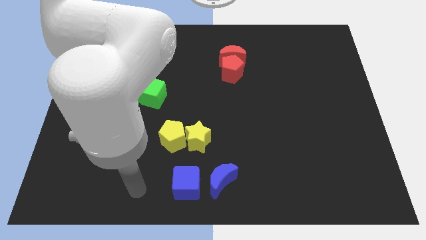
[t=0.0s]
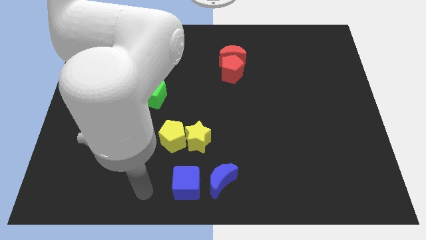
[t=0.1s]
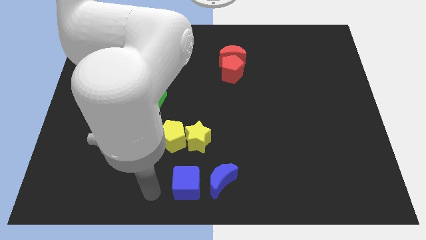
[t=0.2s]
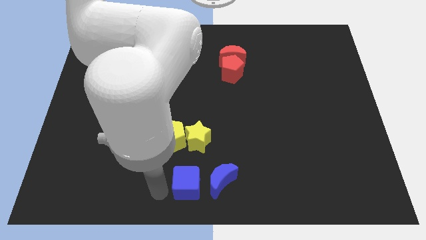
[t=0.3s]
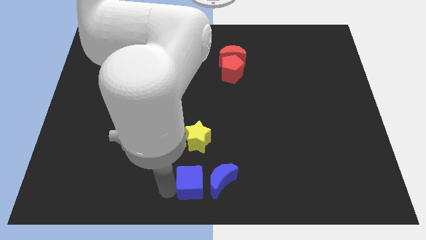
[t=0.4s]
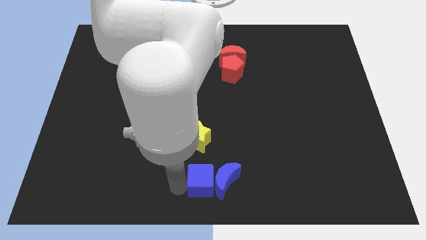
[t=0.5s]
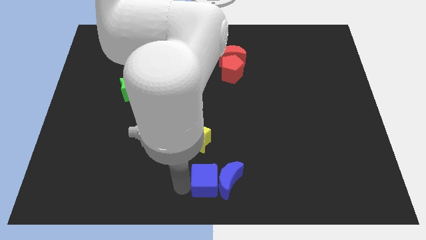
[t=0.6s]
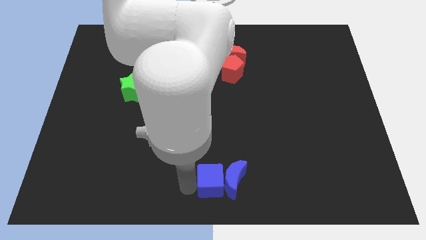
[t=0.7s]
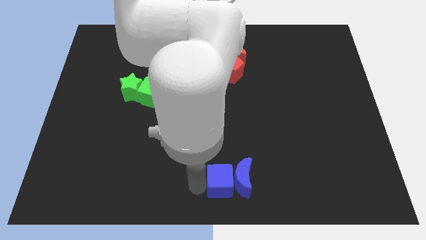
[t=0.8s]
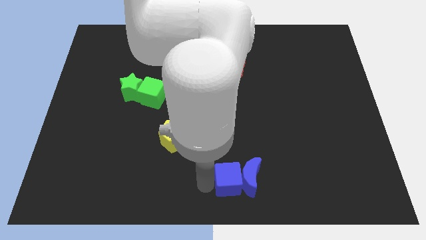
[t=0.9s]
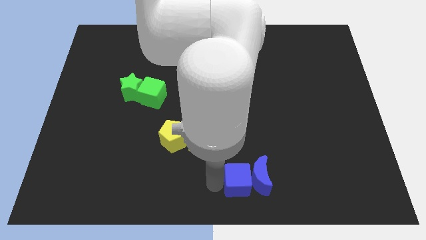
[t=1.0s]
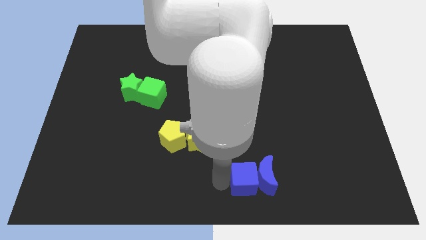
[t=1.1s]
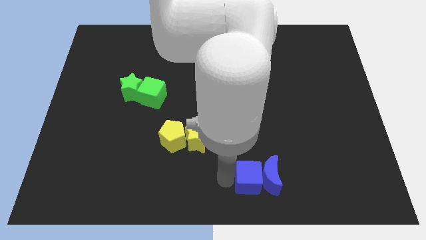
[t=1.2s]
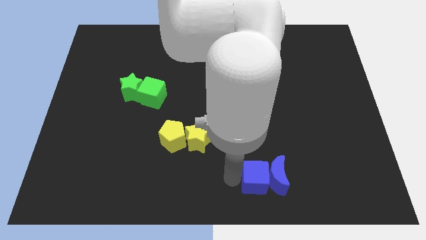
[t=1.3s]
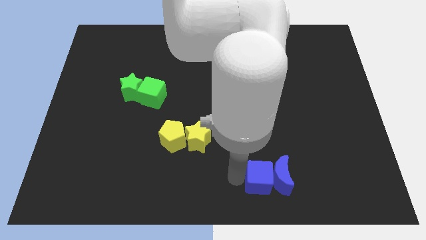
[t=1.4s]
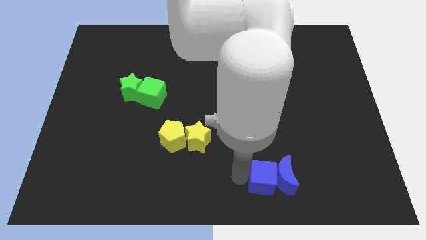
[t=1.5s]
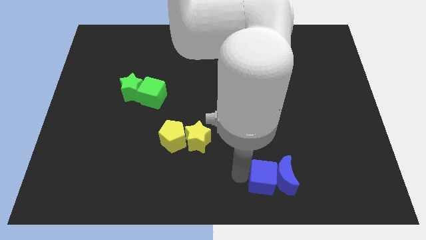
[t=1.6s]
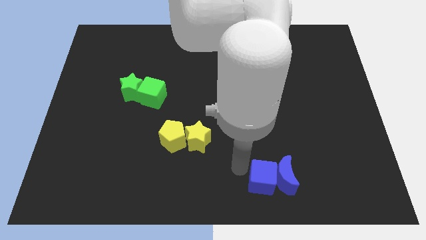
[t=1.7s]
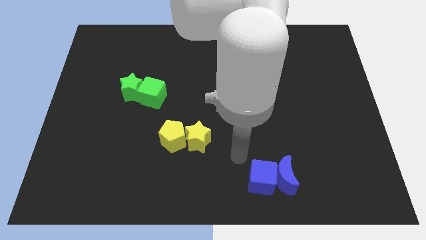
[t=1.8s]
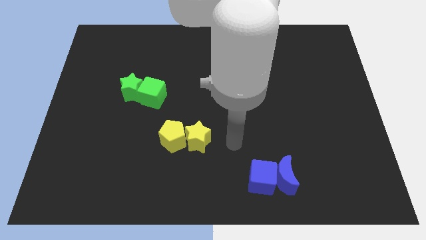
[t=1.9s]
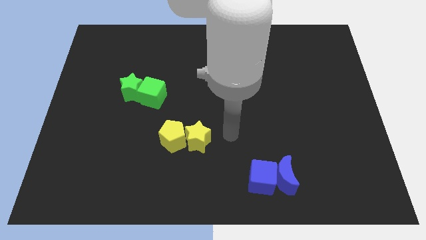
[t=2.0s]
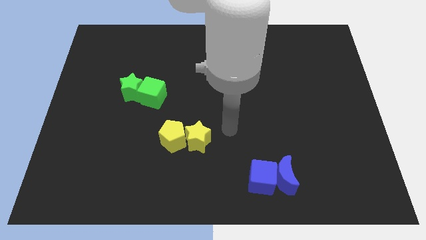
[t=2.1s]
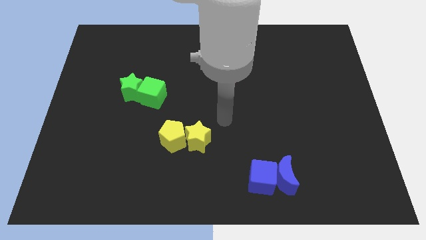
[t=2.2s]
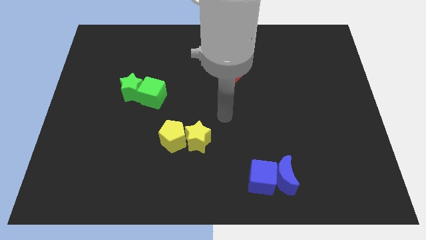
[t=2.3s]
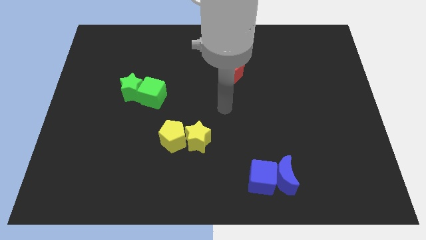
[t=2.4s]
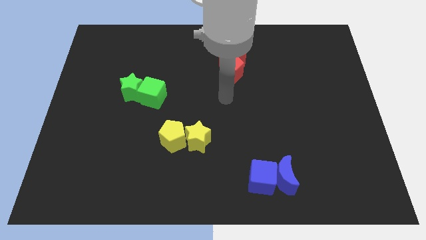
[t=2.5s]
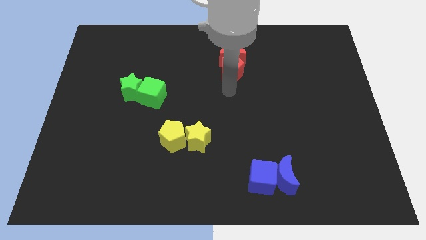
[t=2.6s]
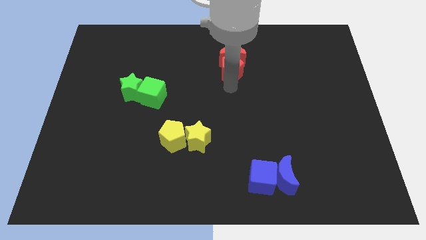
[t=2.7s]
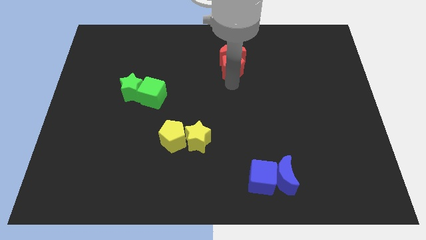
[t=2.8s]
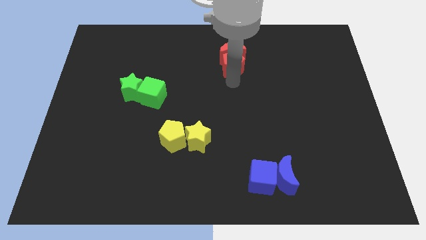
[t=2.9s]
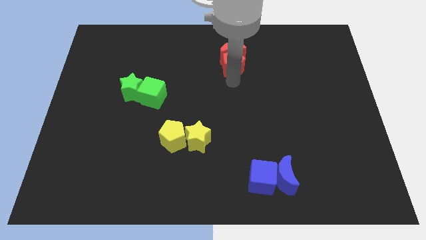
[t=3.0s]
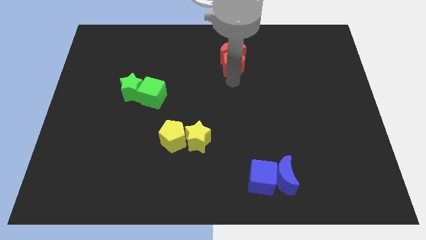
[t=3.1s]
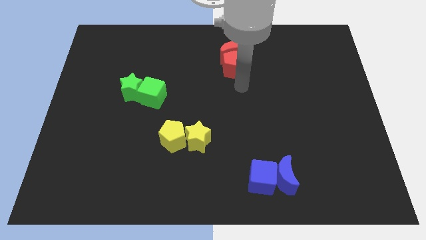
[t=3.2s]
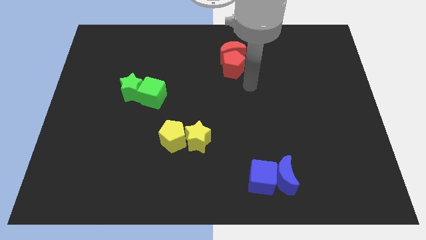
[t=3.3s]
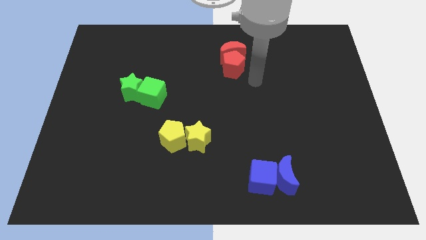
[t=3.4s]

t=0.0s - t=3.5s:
push the blue blocks to the right of the board

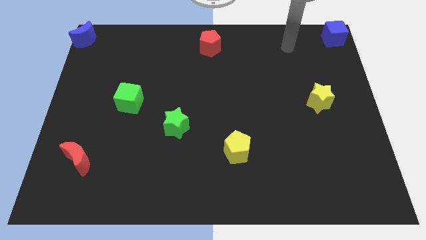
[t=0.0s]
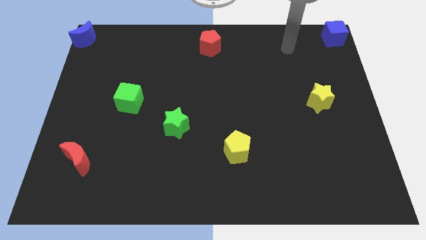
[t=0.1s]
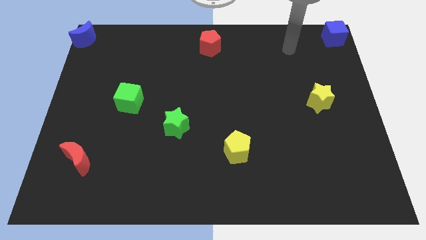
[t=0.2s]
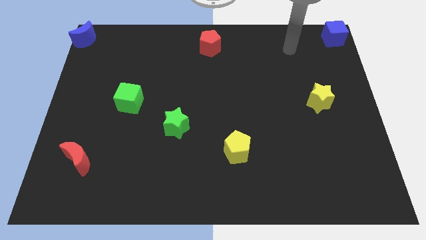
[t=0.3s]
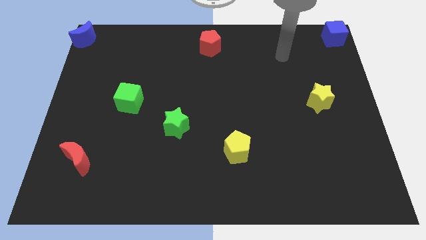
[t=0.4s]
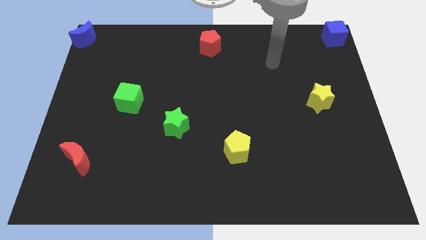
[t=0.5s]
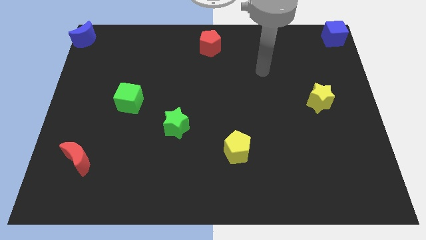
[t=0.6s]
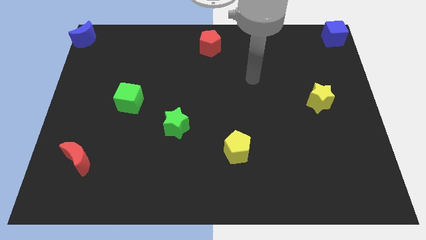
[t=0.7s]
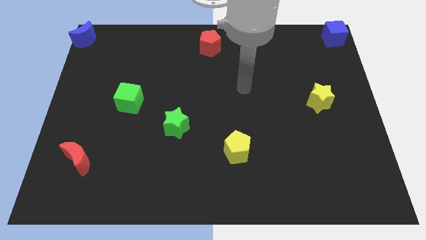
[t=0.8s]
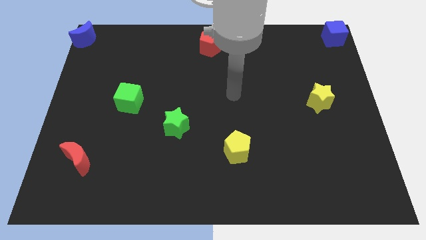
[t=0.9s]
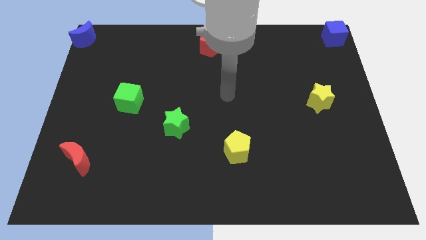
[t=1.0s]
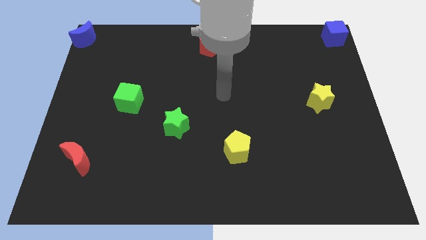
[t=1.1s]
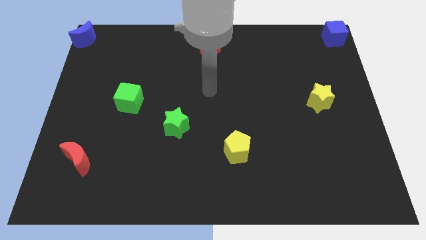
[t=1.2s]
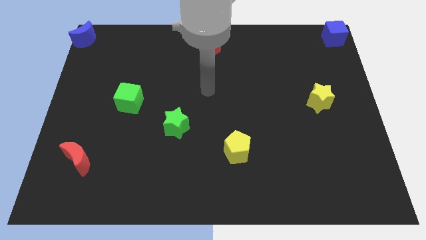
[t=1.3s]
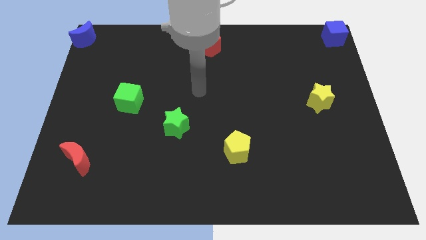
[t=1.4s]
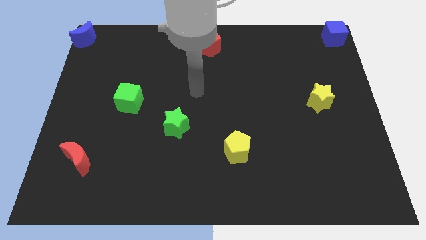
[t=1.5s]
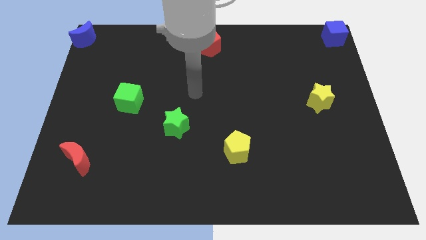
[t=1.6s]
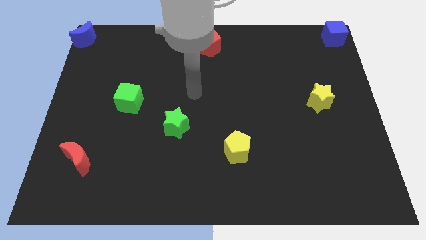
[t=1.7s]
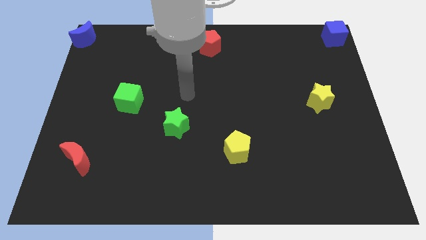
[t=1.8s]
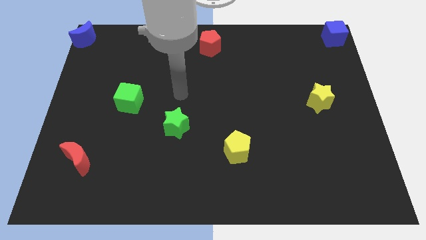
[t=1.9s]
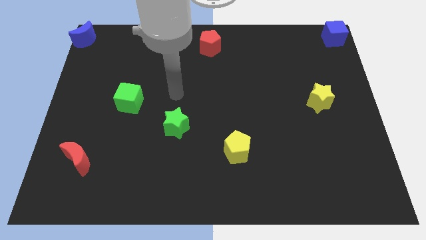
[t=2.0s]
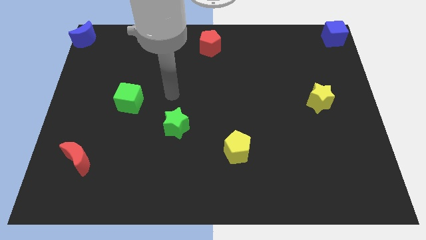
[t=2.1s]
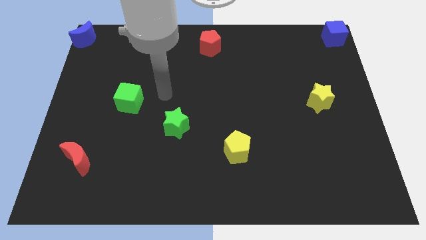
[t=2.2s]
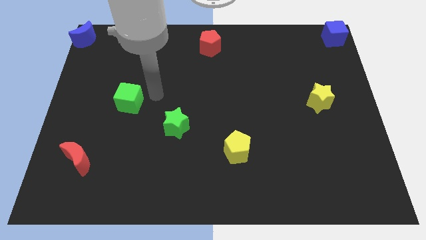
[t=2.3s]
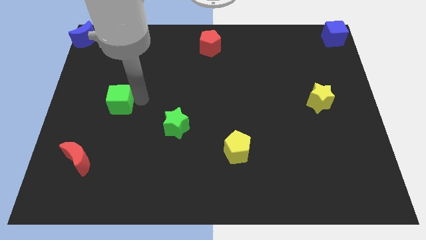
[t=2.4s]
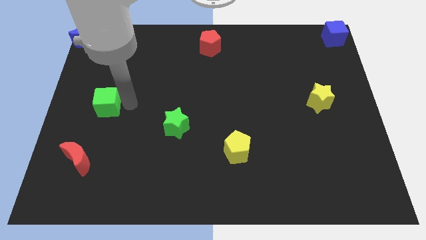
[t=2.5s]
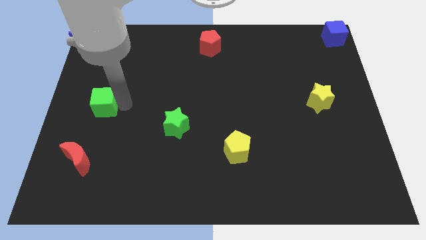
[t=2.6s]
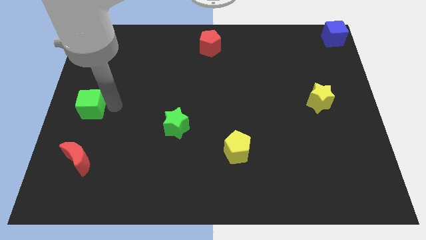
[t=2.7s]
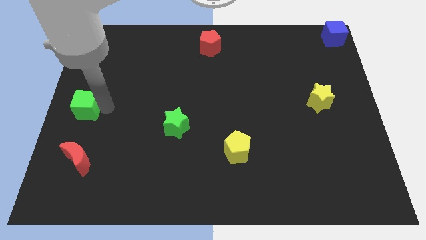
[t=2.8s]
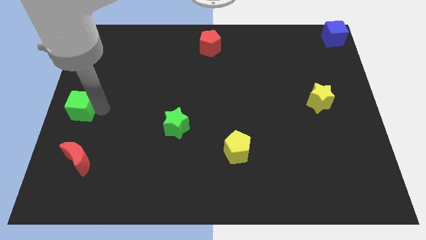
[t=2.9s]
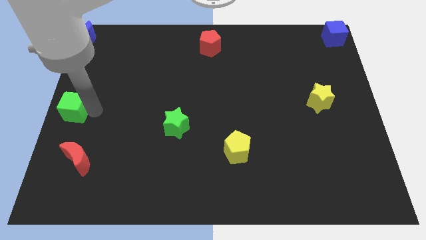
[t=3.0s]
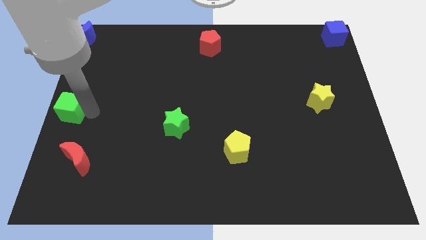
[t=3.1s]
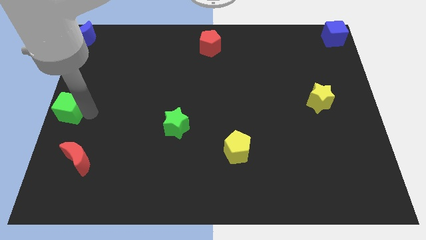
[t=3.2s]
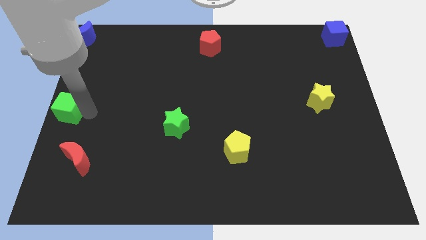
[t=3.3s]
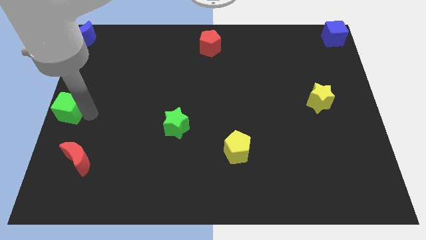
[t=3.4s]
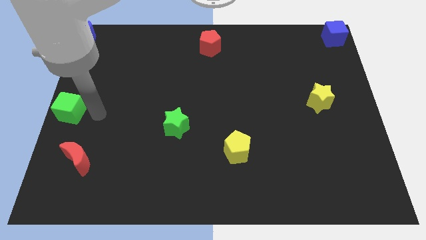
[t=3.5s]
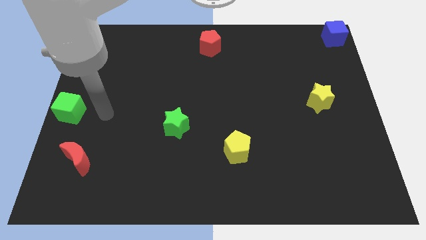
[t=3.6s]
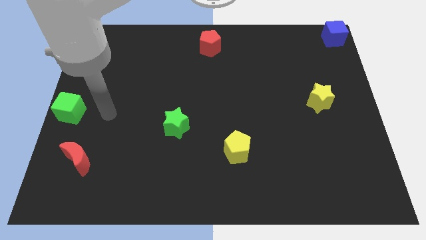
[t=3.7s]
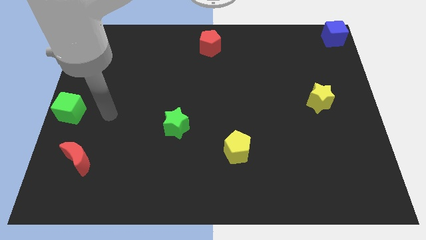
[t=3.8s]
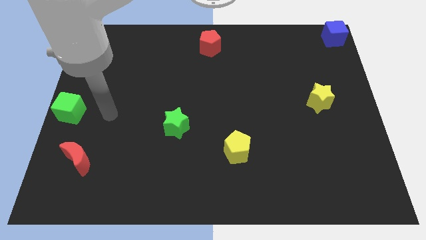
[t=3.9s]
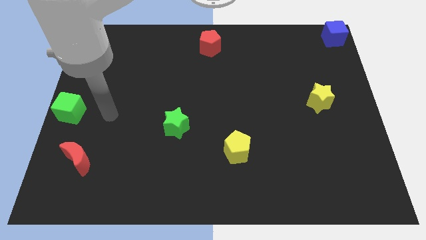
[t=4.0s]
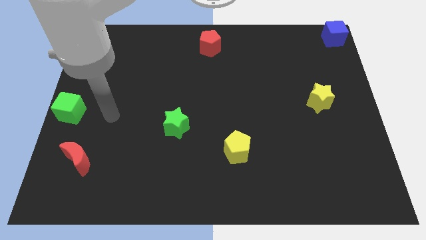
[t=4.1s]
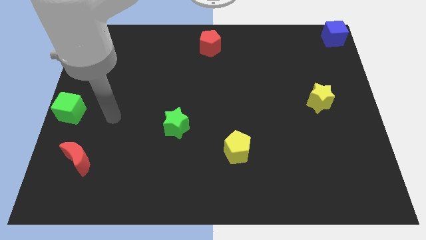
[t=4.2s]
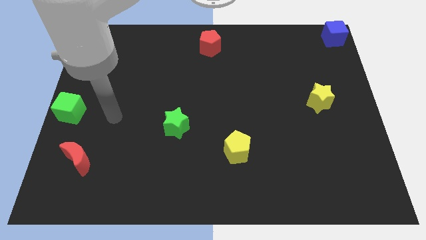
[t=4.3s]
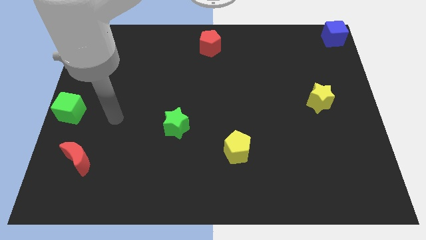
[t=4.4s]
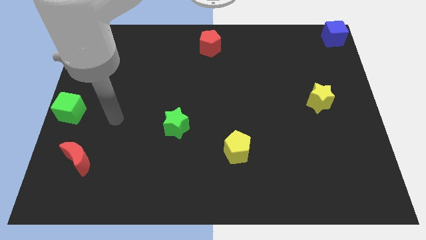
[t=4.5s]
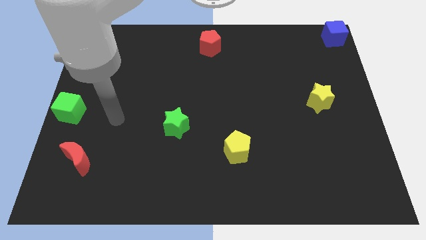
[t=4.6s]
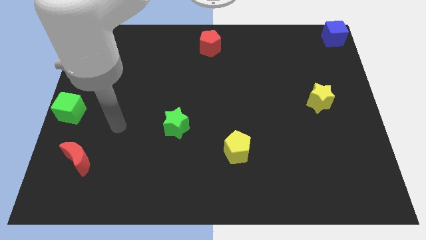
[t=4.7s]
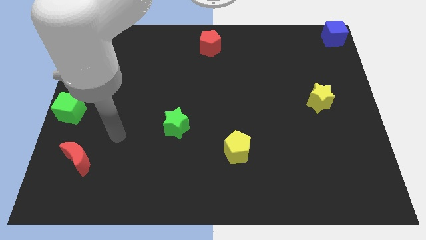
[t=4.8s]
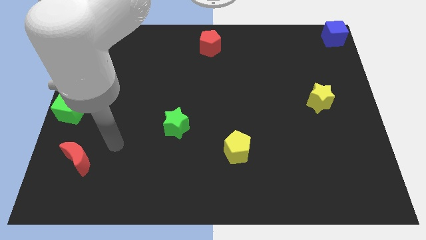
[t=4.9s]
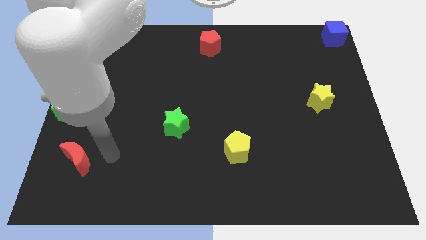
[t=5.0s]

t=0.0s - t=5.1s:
move the green cube to the left center of the board

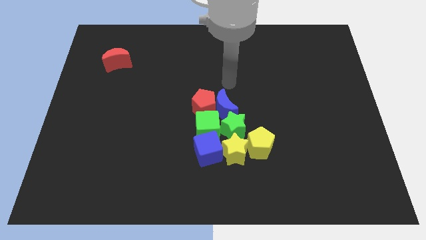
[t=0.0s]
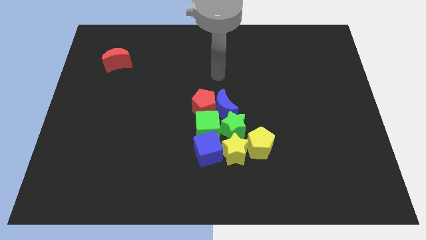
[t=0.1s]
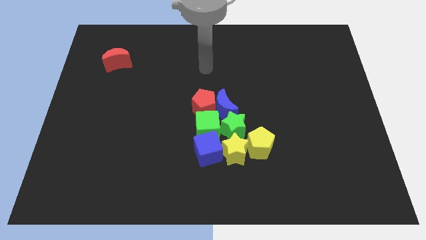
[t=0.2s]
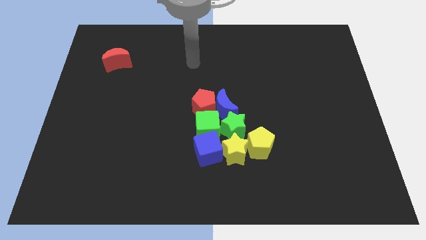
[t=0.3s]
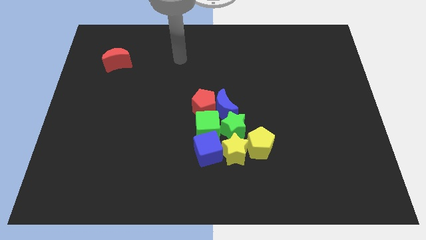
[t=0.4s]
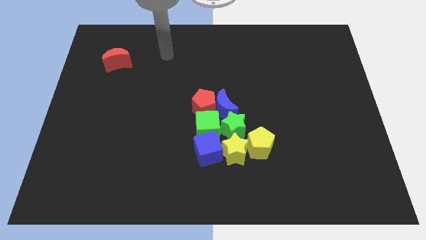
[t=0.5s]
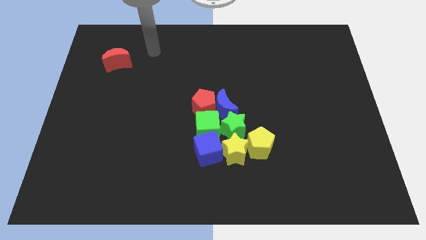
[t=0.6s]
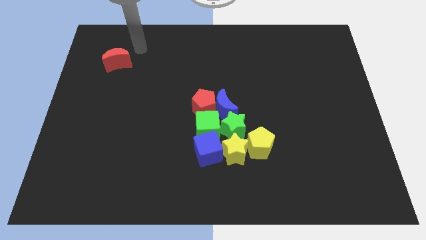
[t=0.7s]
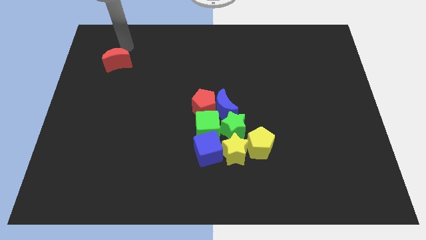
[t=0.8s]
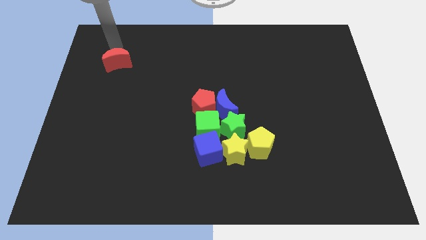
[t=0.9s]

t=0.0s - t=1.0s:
place your hand above the red crescent
